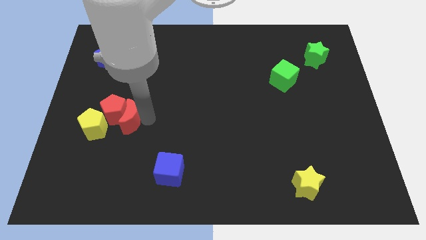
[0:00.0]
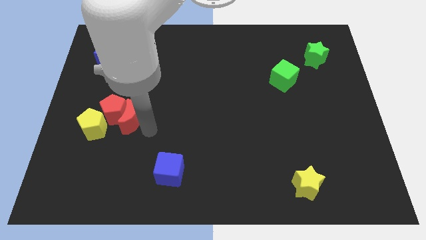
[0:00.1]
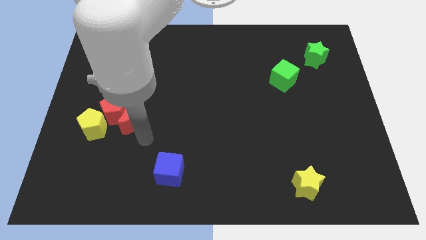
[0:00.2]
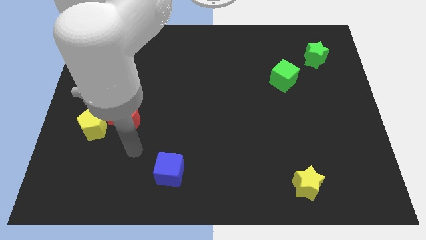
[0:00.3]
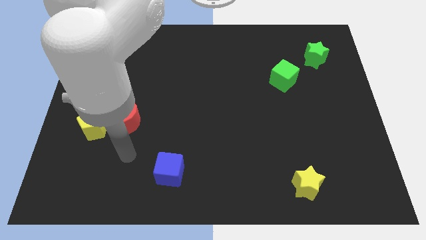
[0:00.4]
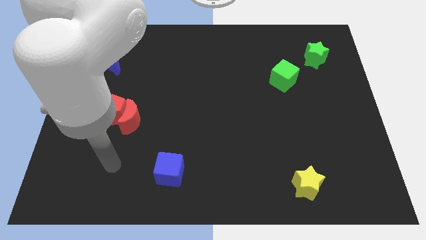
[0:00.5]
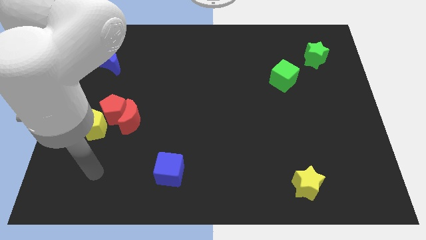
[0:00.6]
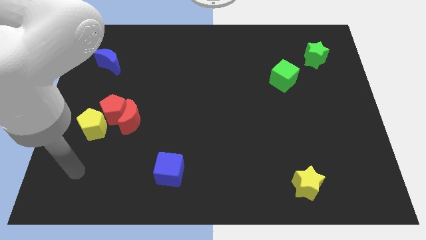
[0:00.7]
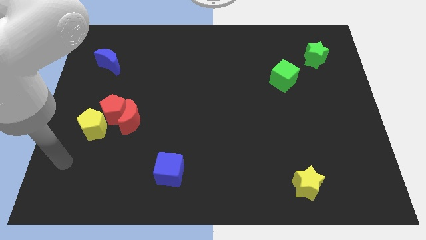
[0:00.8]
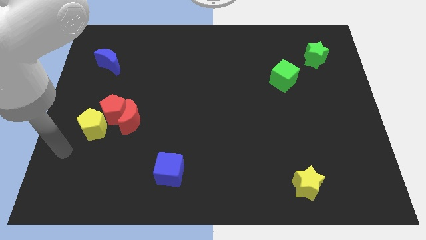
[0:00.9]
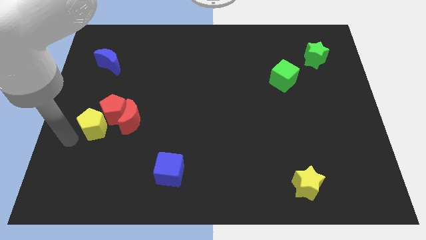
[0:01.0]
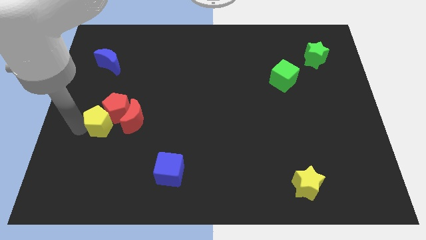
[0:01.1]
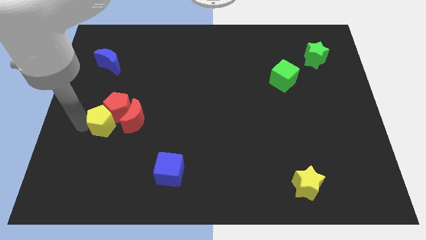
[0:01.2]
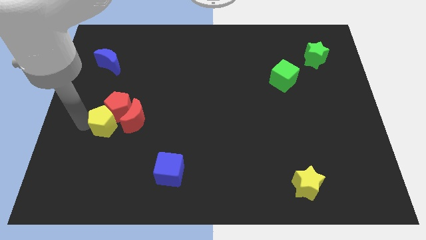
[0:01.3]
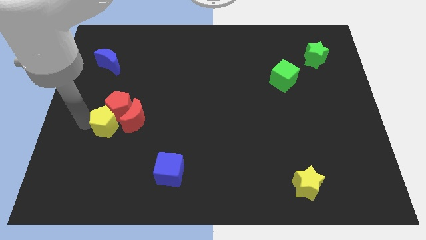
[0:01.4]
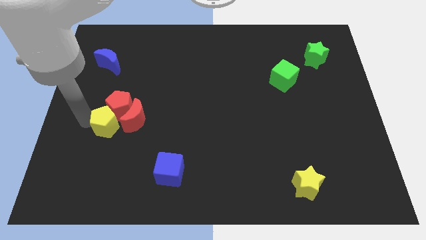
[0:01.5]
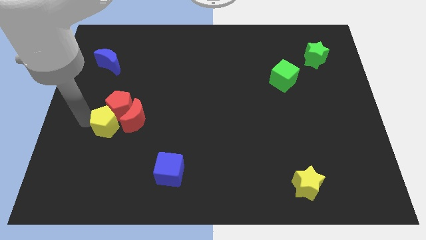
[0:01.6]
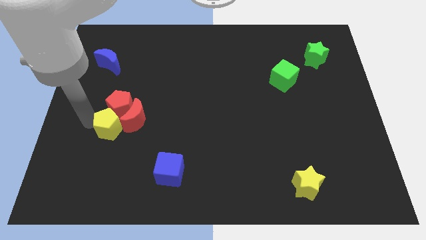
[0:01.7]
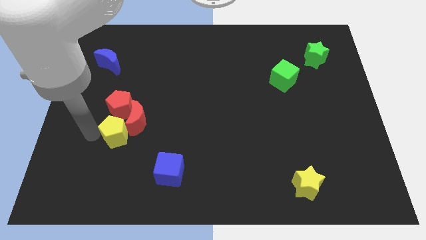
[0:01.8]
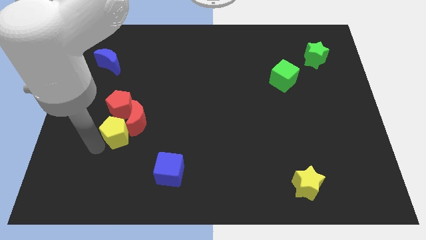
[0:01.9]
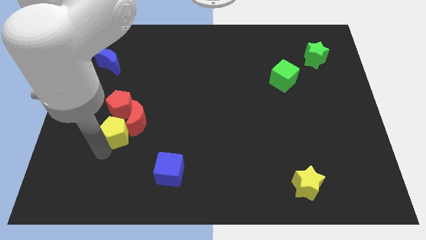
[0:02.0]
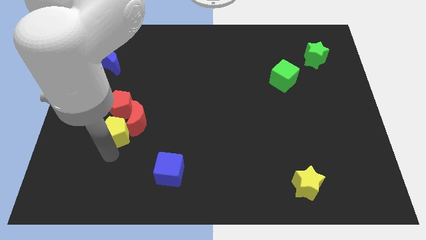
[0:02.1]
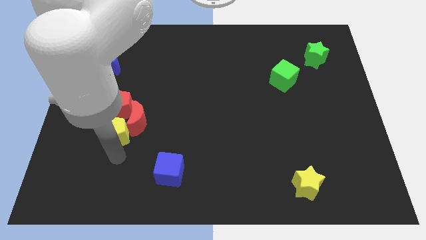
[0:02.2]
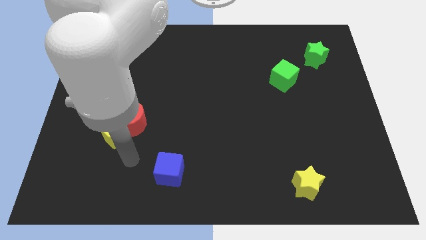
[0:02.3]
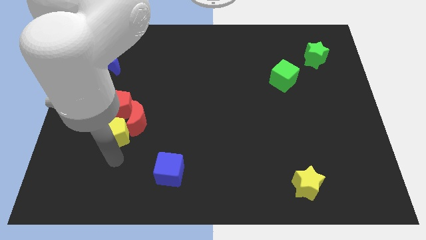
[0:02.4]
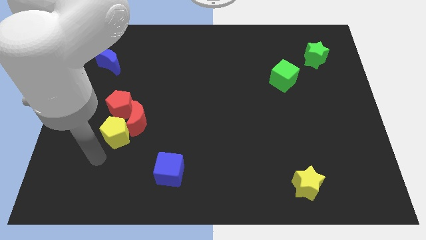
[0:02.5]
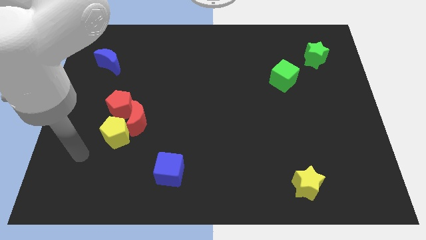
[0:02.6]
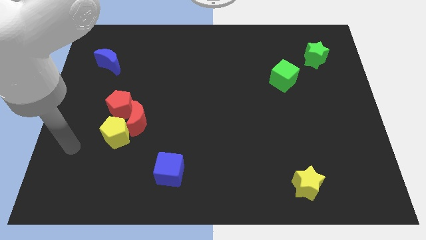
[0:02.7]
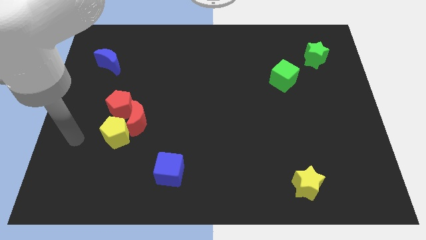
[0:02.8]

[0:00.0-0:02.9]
move the yellow pentagon slightly to the right

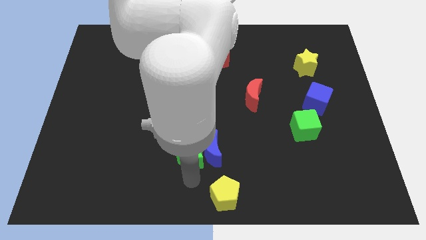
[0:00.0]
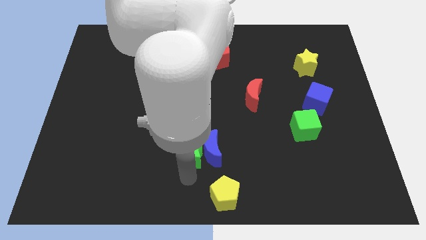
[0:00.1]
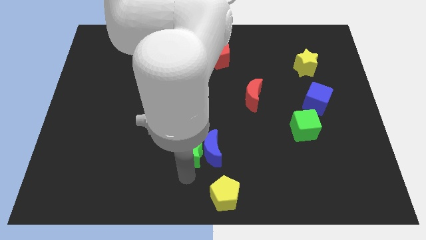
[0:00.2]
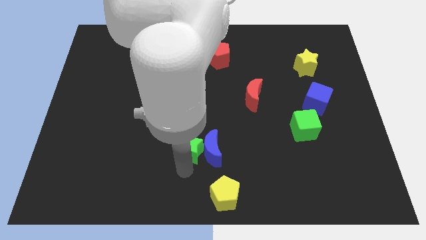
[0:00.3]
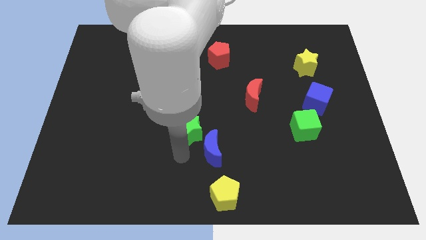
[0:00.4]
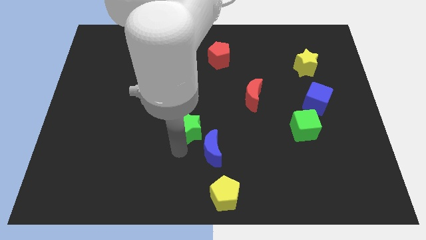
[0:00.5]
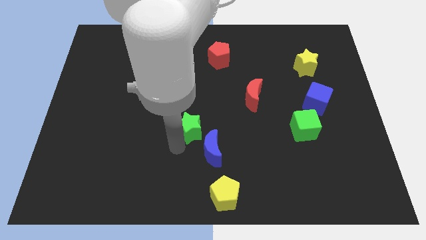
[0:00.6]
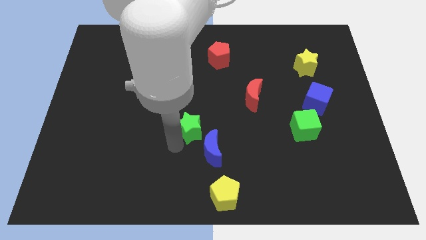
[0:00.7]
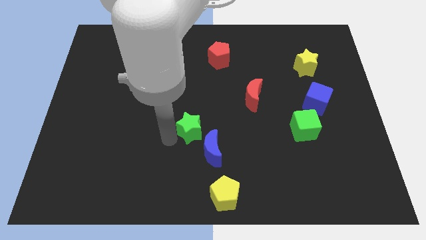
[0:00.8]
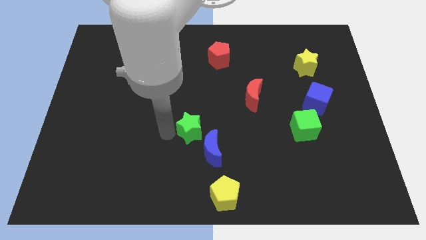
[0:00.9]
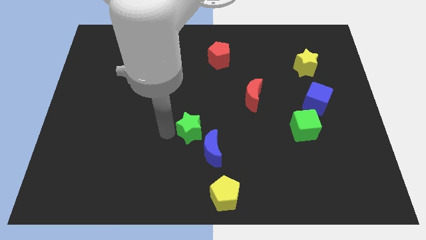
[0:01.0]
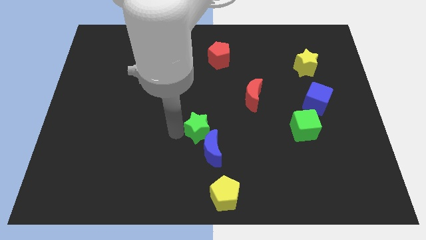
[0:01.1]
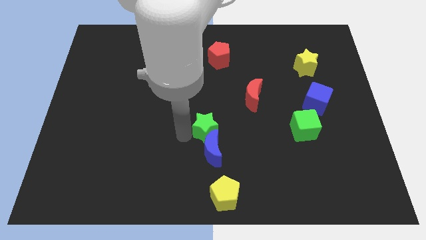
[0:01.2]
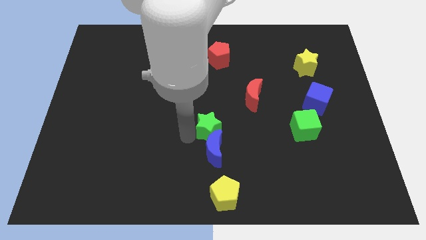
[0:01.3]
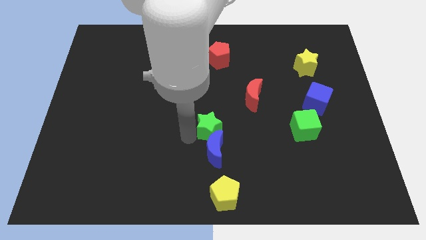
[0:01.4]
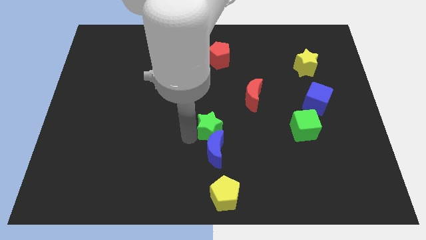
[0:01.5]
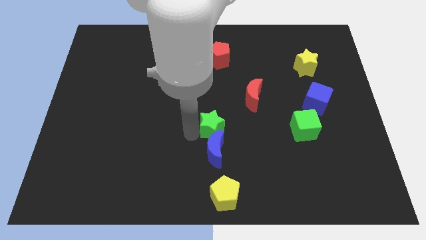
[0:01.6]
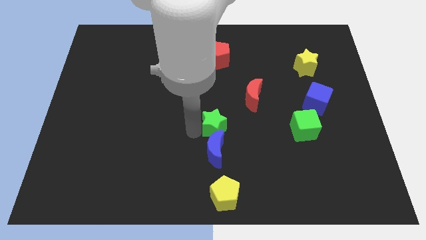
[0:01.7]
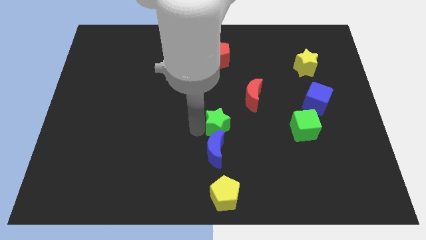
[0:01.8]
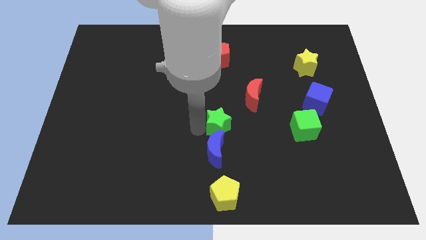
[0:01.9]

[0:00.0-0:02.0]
place the green star on top of the blue moon

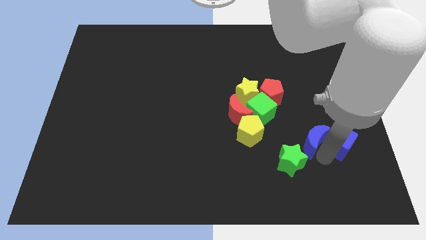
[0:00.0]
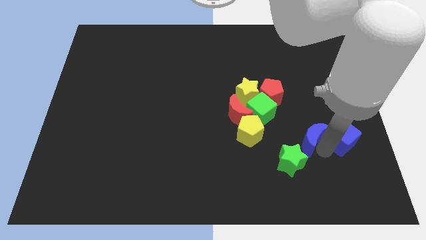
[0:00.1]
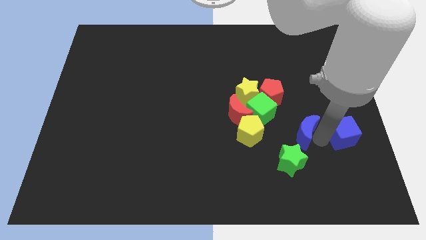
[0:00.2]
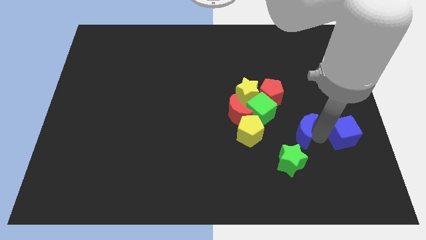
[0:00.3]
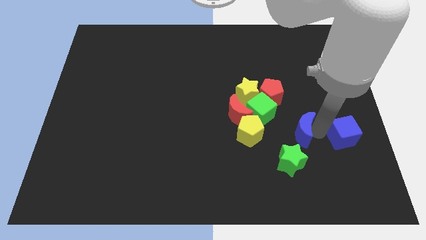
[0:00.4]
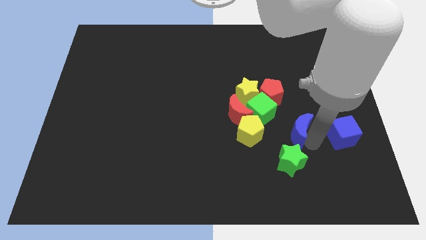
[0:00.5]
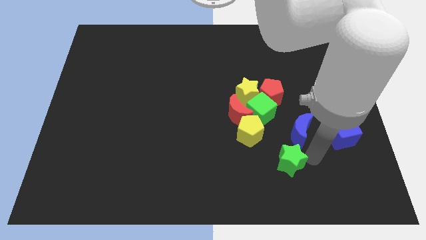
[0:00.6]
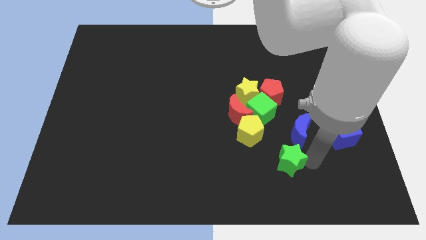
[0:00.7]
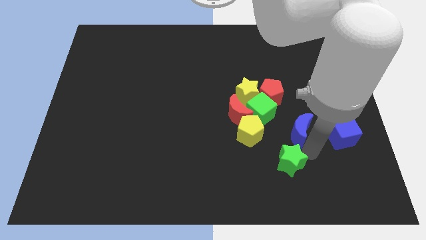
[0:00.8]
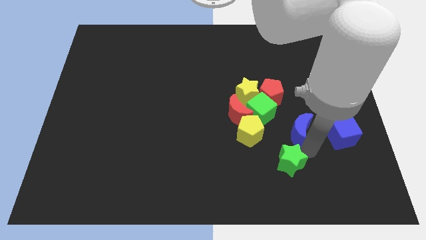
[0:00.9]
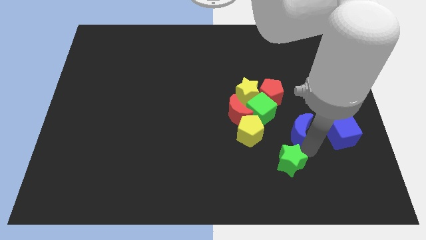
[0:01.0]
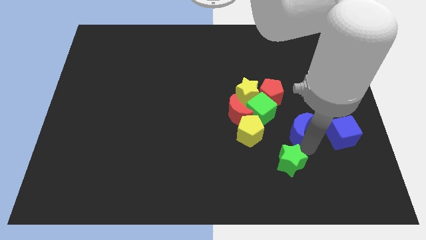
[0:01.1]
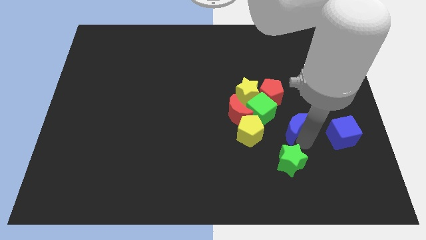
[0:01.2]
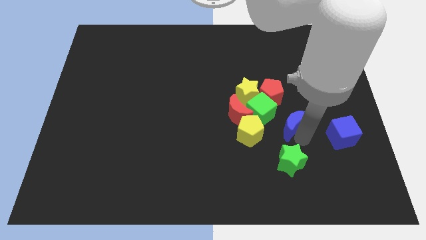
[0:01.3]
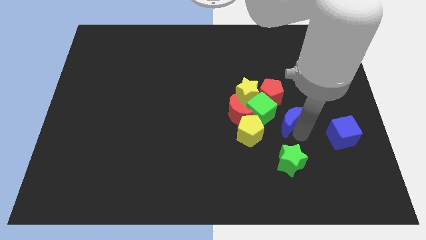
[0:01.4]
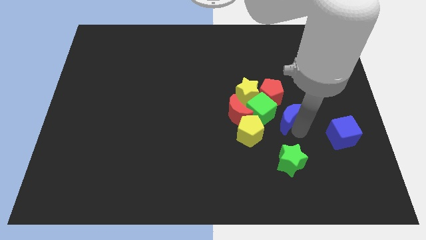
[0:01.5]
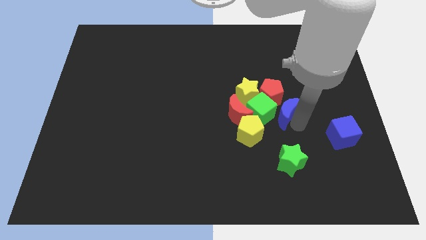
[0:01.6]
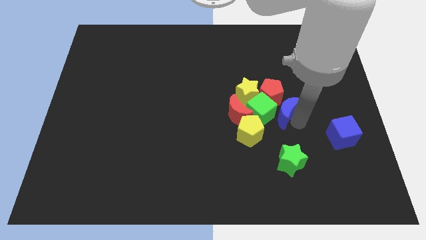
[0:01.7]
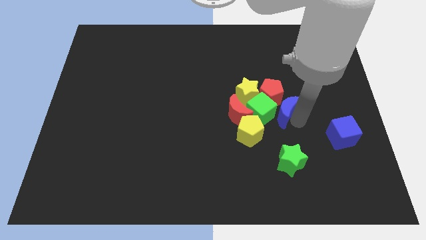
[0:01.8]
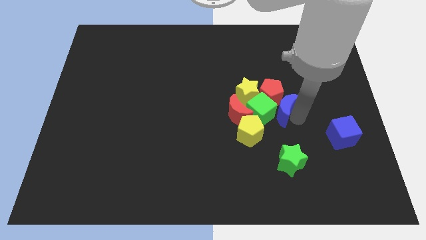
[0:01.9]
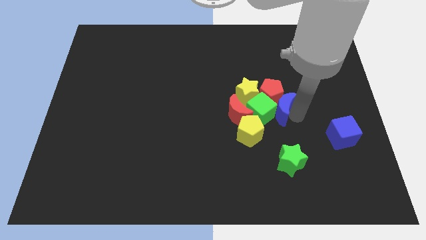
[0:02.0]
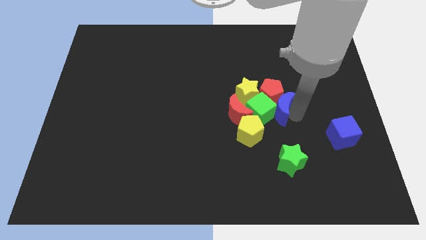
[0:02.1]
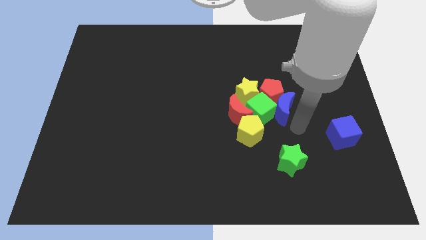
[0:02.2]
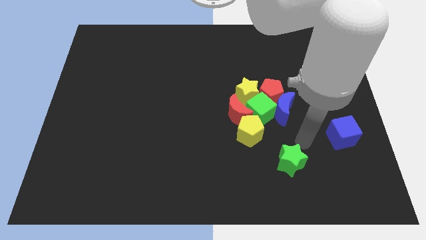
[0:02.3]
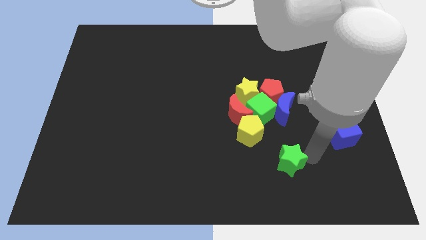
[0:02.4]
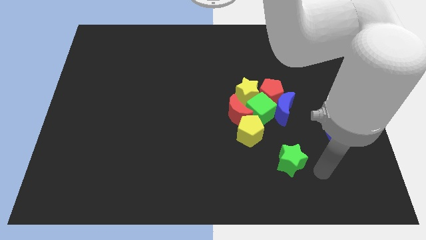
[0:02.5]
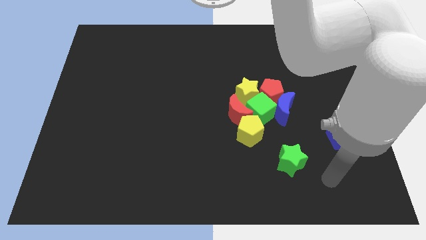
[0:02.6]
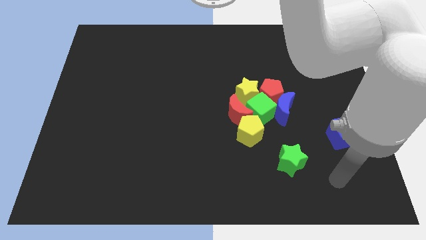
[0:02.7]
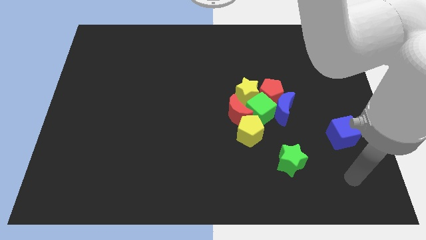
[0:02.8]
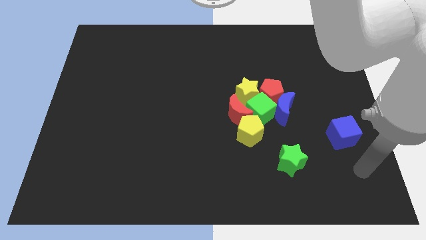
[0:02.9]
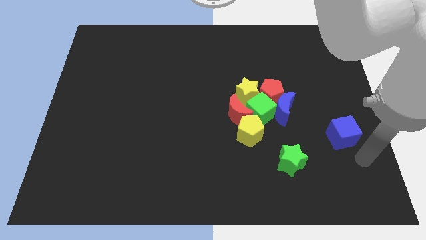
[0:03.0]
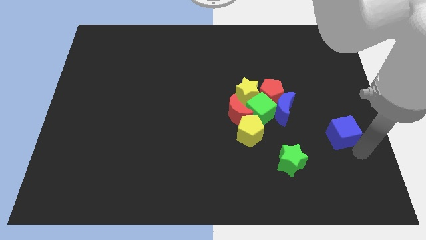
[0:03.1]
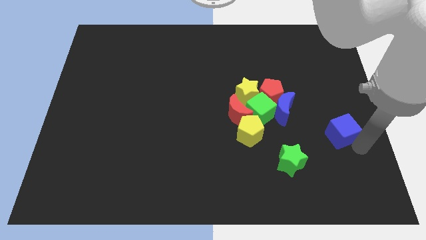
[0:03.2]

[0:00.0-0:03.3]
move the blue crescent diagonally to green star

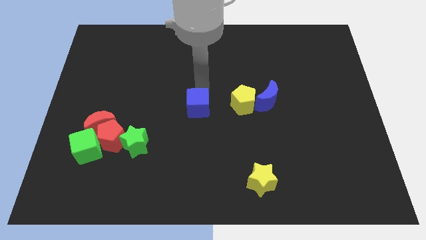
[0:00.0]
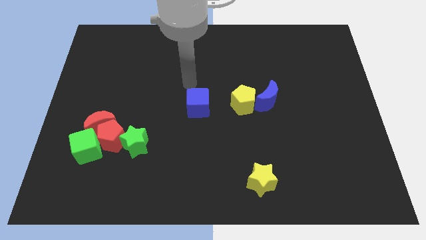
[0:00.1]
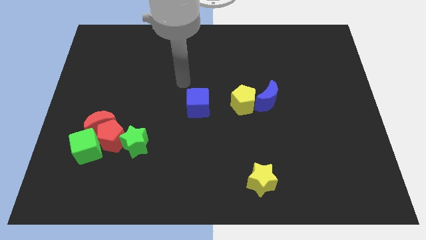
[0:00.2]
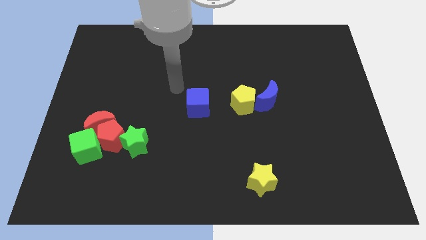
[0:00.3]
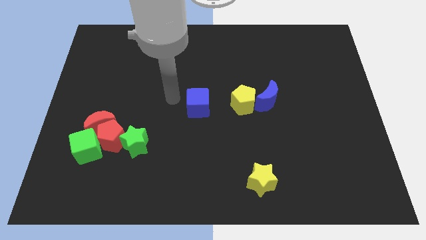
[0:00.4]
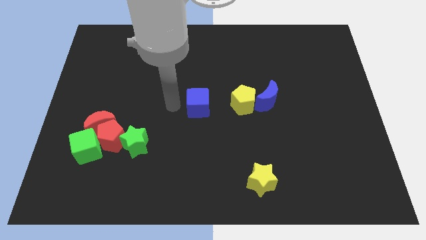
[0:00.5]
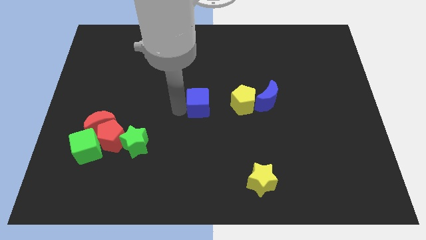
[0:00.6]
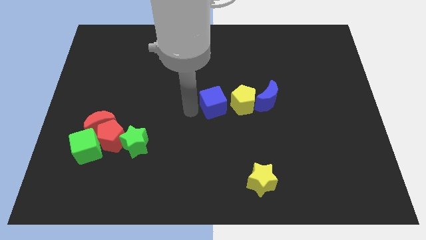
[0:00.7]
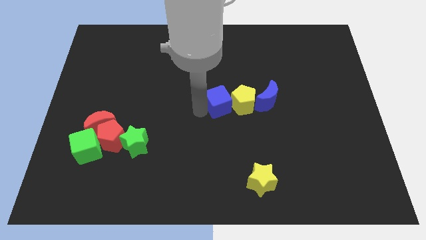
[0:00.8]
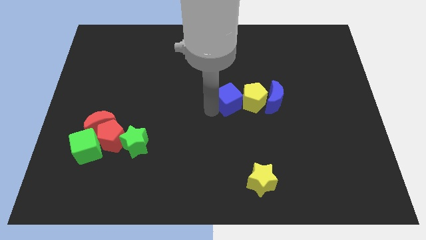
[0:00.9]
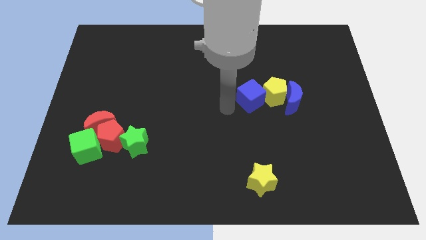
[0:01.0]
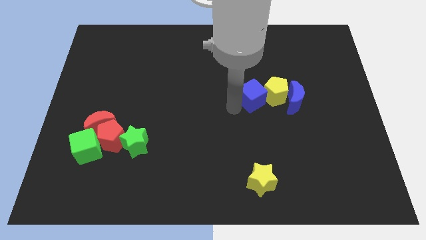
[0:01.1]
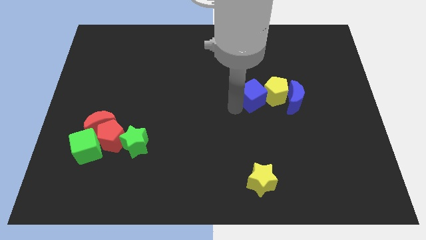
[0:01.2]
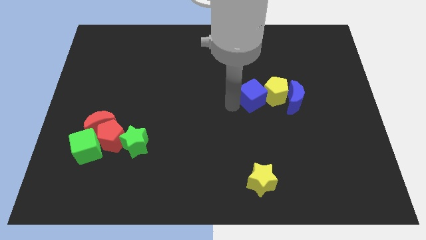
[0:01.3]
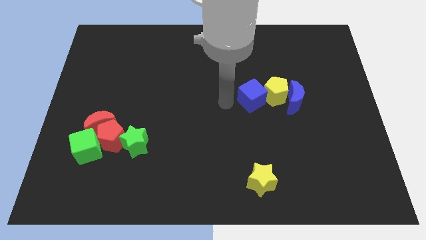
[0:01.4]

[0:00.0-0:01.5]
push the blue cube into the yellow pentagon
